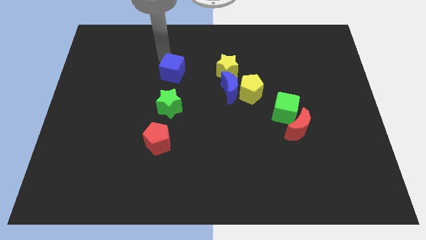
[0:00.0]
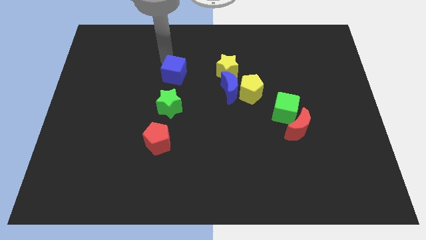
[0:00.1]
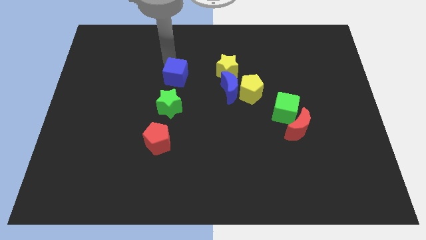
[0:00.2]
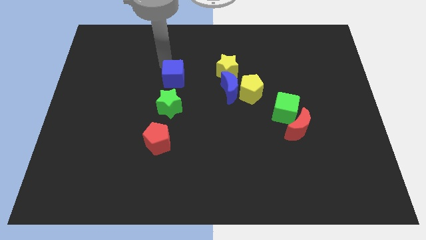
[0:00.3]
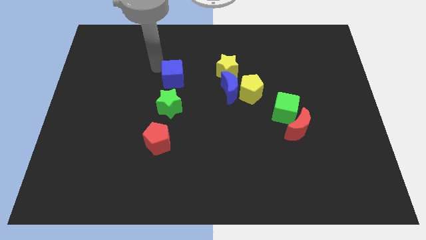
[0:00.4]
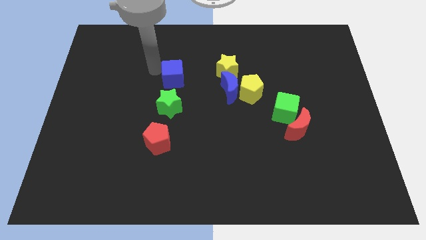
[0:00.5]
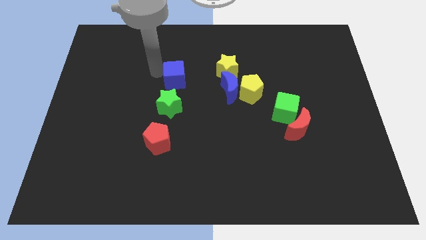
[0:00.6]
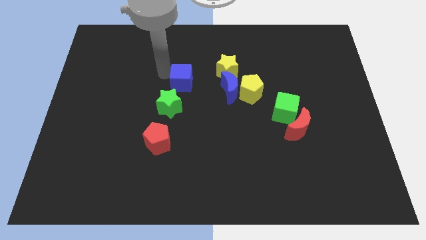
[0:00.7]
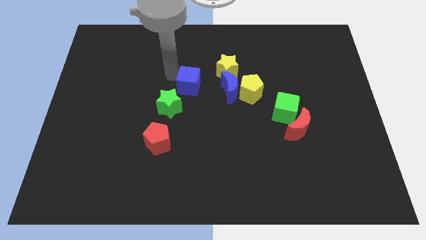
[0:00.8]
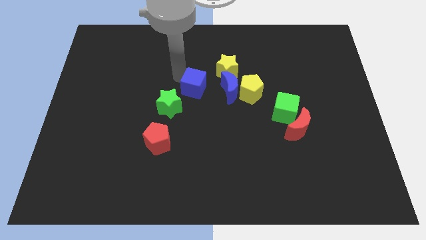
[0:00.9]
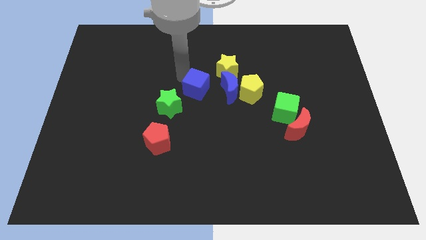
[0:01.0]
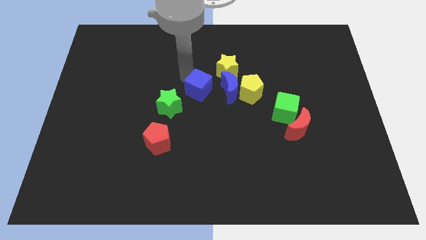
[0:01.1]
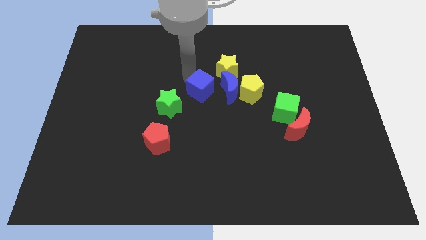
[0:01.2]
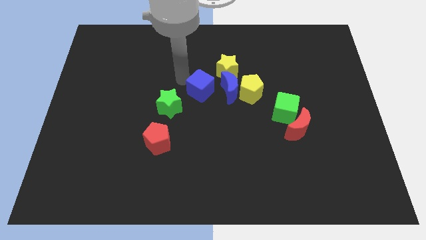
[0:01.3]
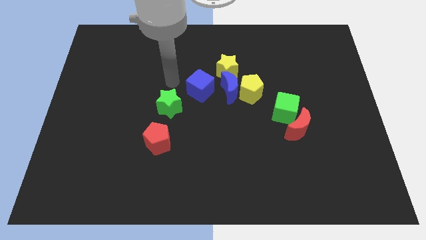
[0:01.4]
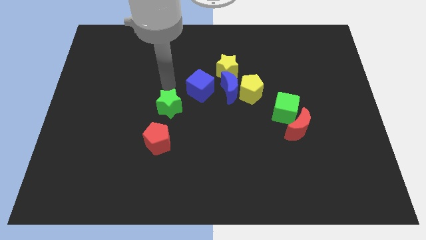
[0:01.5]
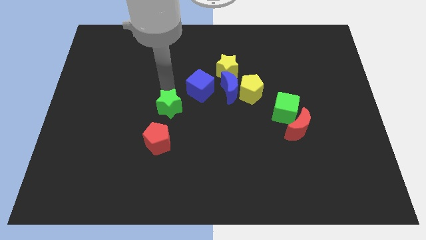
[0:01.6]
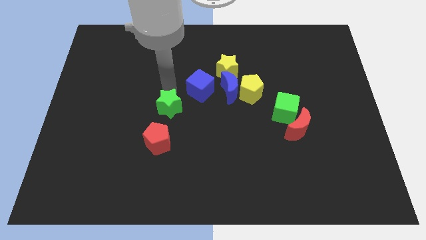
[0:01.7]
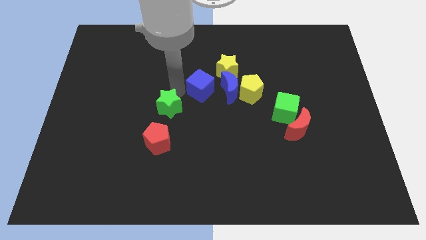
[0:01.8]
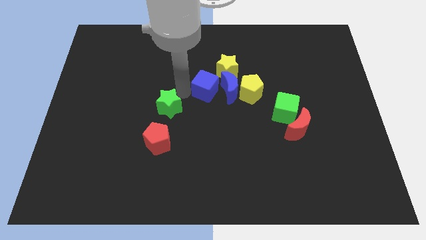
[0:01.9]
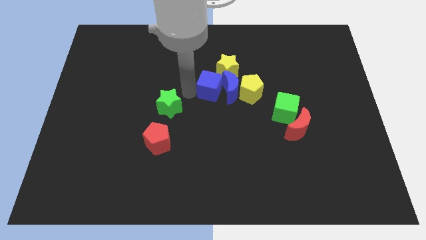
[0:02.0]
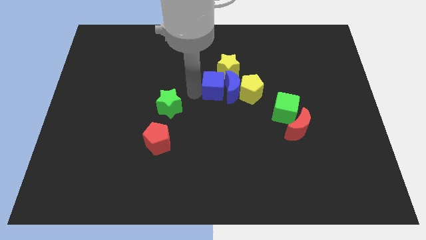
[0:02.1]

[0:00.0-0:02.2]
push the blue cube into the blue crescent

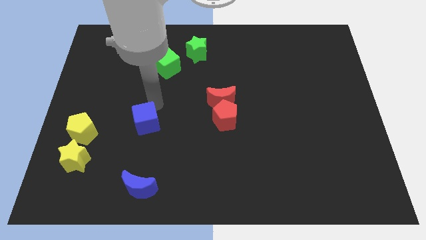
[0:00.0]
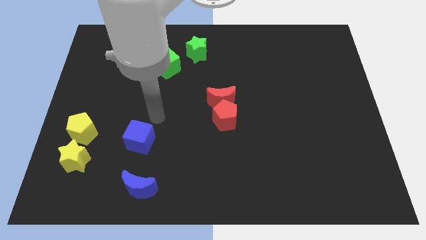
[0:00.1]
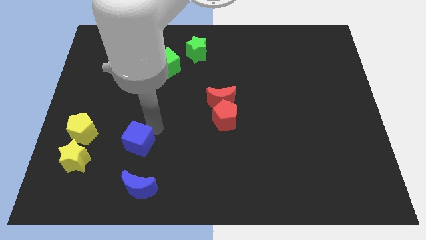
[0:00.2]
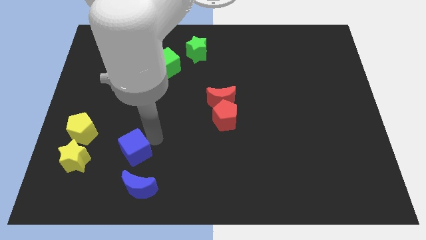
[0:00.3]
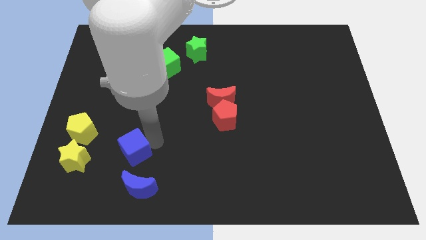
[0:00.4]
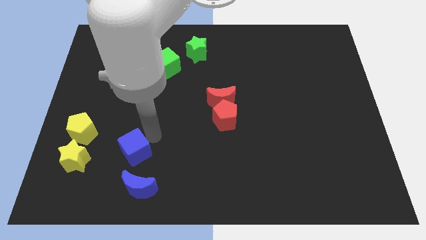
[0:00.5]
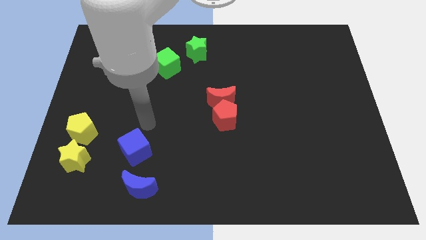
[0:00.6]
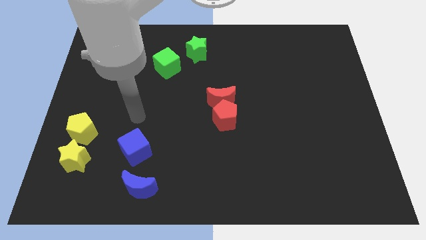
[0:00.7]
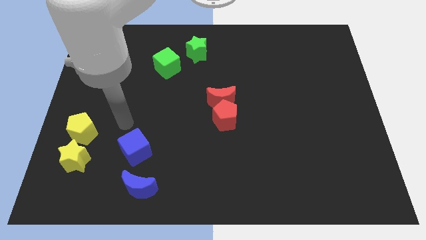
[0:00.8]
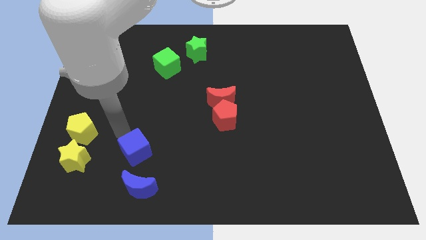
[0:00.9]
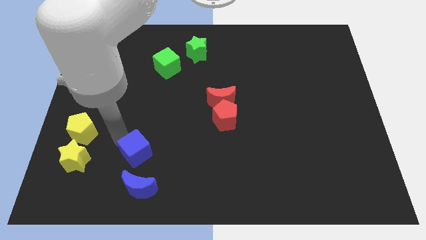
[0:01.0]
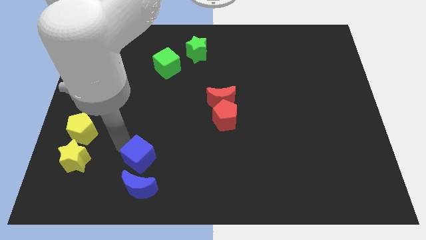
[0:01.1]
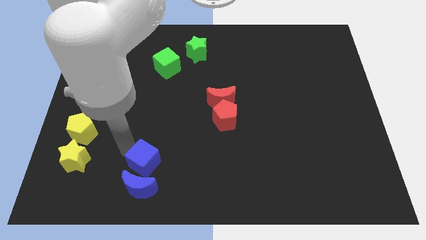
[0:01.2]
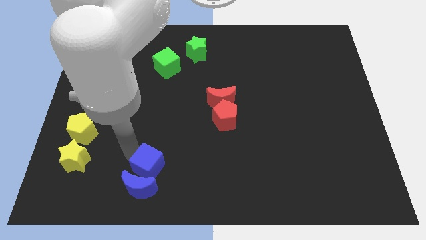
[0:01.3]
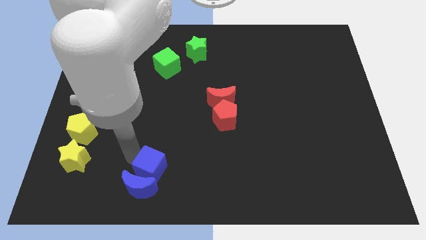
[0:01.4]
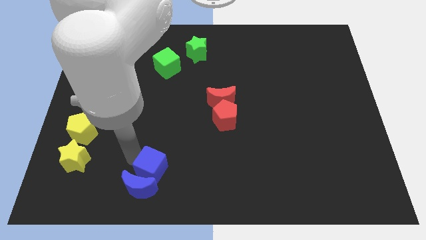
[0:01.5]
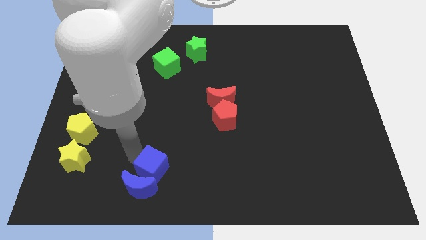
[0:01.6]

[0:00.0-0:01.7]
place the blue cube right to the yellow star

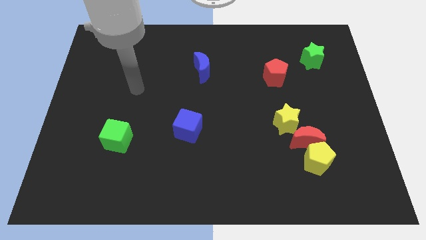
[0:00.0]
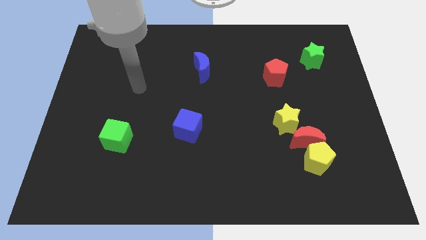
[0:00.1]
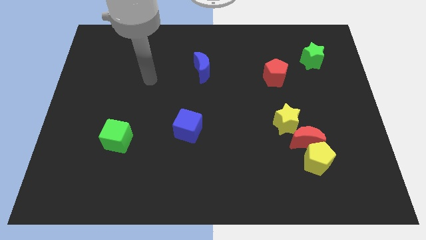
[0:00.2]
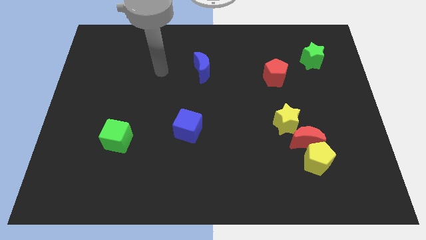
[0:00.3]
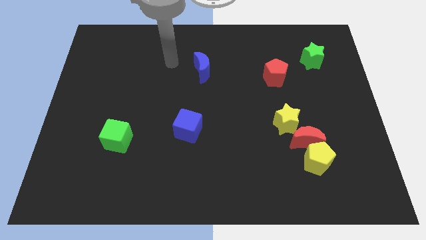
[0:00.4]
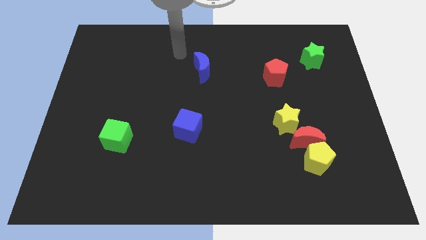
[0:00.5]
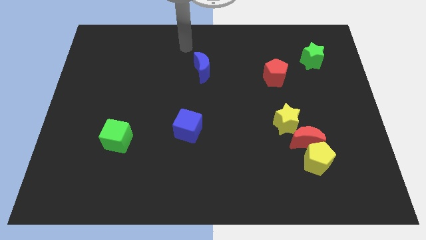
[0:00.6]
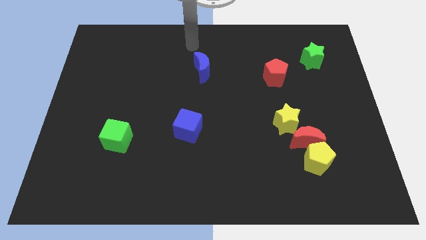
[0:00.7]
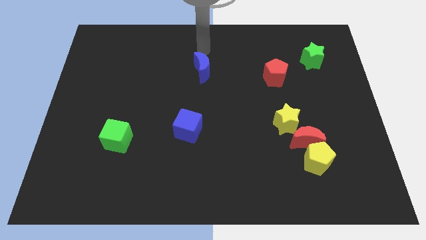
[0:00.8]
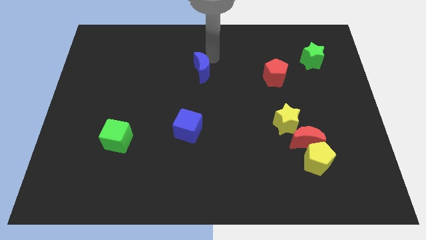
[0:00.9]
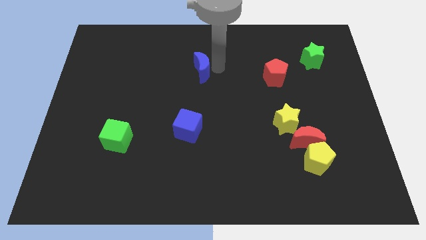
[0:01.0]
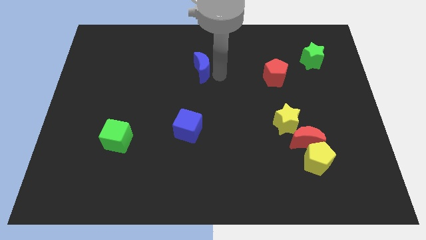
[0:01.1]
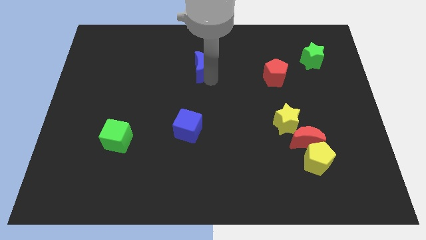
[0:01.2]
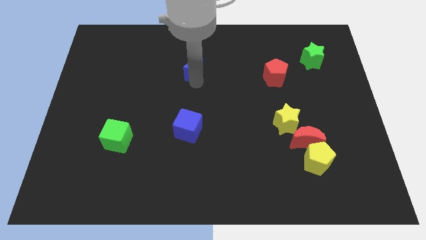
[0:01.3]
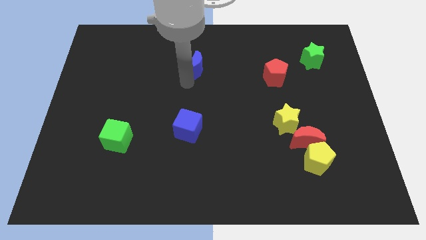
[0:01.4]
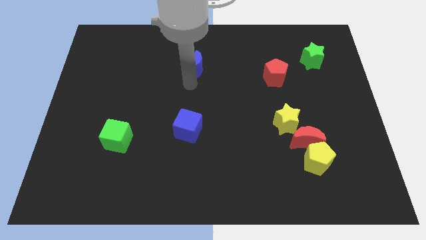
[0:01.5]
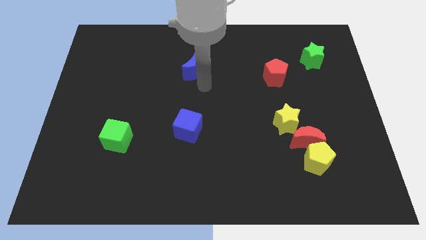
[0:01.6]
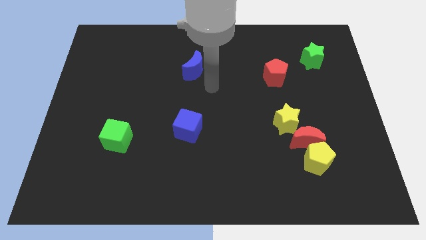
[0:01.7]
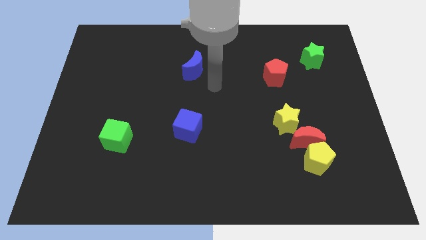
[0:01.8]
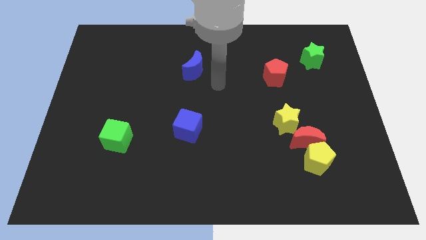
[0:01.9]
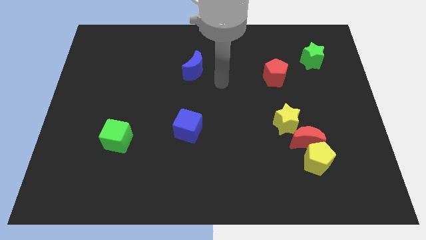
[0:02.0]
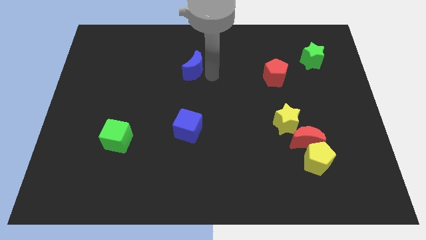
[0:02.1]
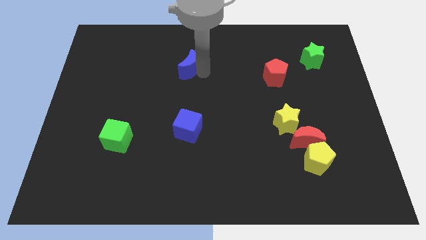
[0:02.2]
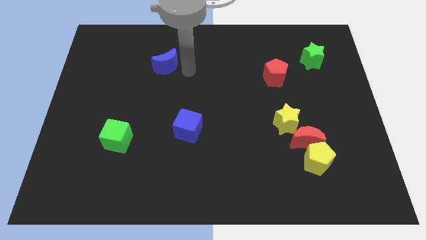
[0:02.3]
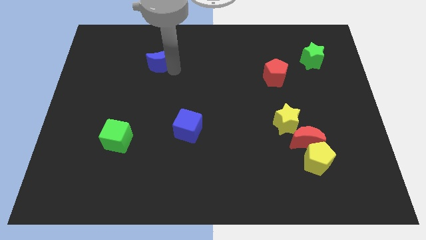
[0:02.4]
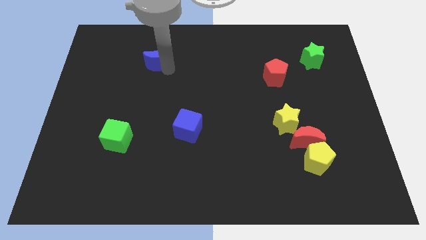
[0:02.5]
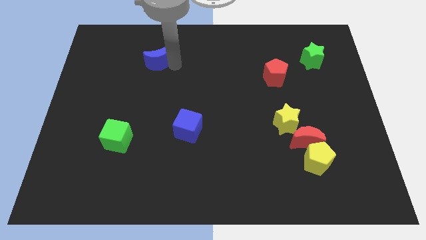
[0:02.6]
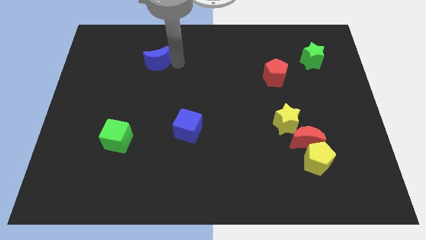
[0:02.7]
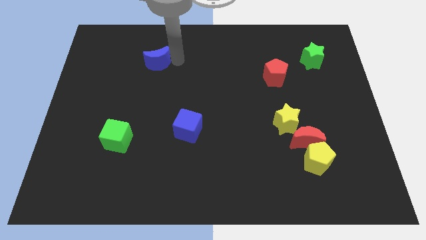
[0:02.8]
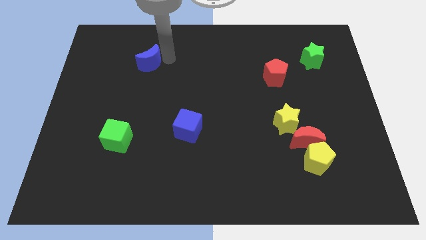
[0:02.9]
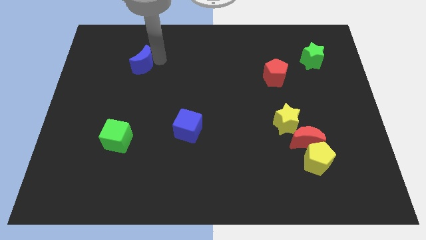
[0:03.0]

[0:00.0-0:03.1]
push the blue crescent towards the left side of the board

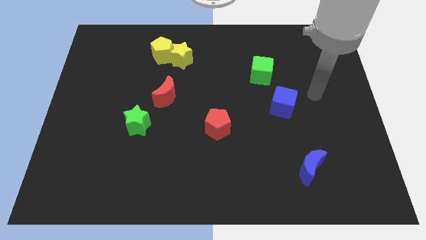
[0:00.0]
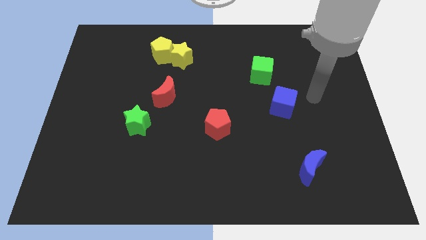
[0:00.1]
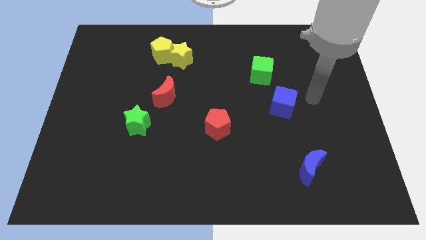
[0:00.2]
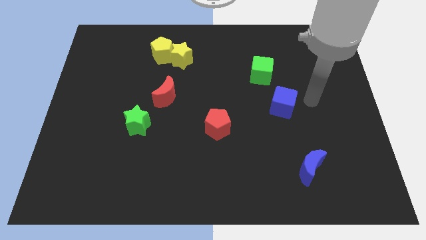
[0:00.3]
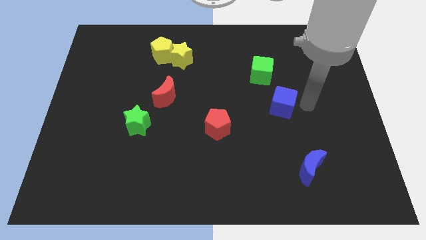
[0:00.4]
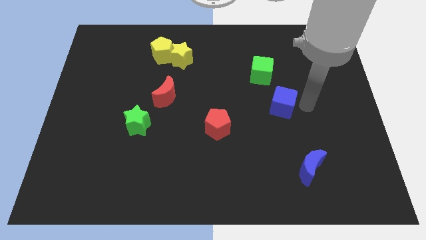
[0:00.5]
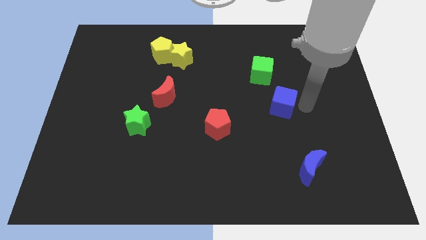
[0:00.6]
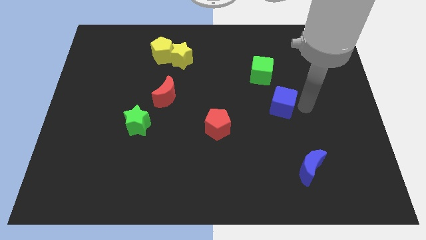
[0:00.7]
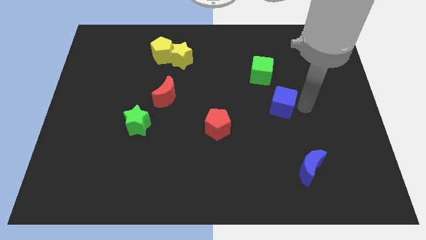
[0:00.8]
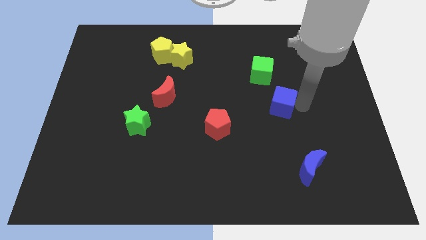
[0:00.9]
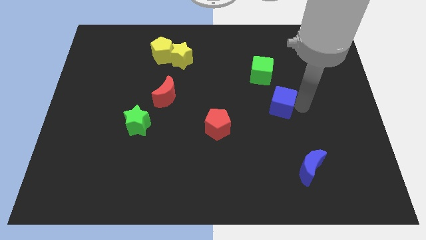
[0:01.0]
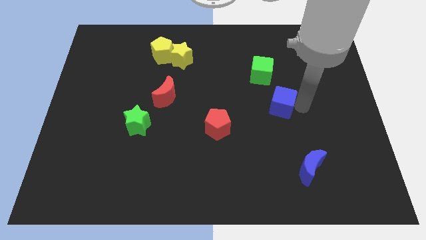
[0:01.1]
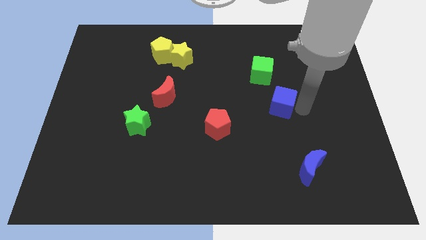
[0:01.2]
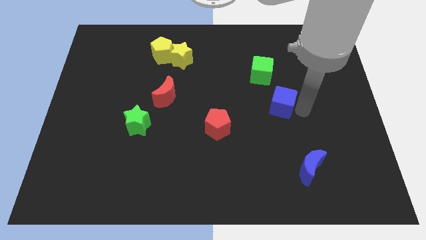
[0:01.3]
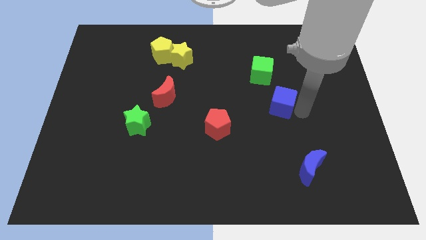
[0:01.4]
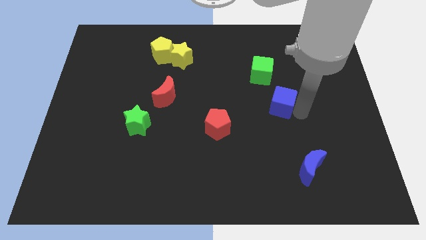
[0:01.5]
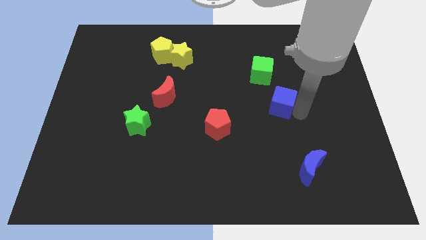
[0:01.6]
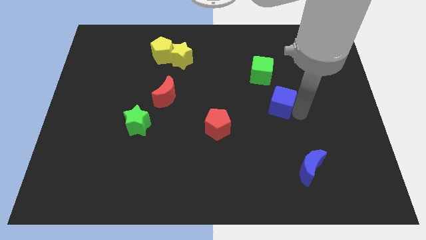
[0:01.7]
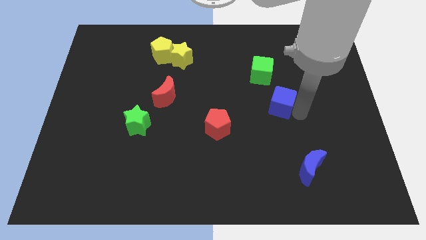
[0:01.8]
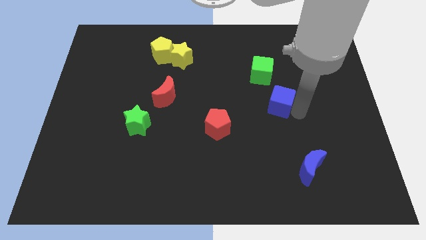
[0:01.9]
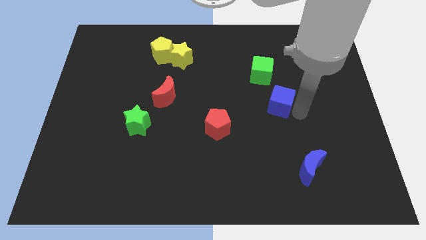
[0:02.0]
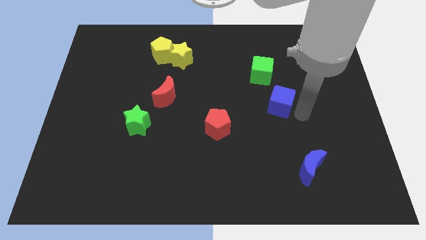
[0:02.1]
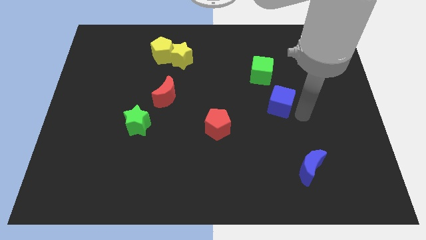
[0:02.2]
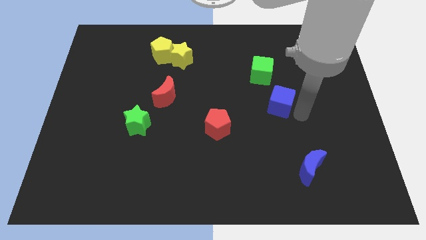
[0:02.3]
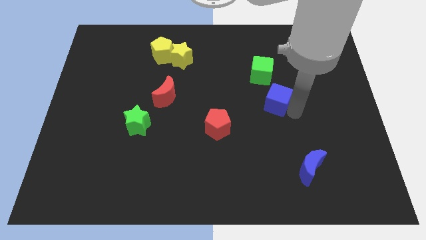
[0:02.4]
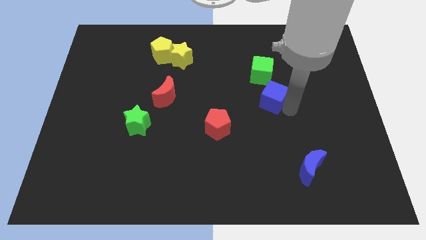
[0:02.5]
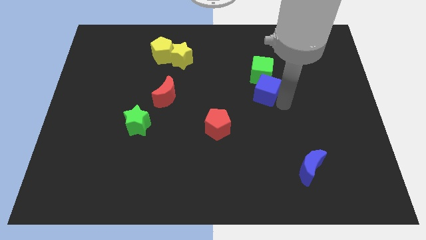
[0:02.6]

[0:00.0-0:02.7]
place the blue cube to the bottom of the green cube
